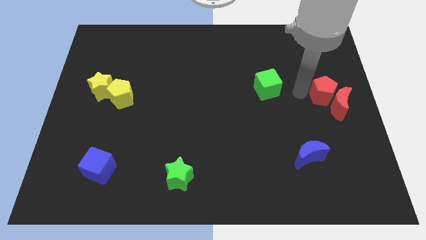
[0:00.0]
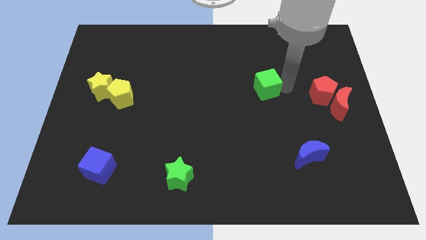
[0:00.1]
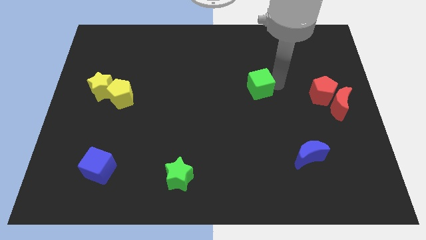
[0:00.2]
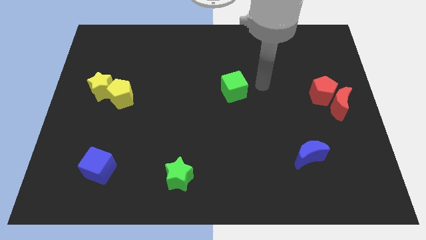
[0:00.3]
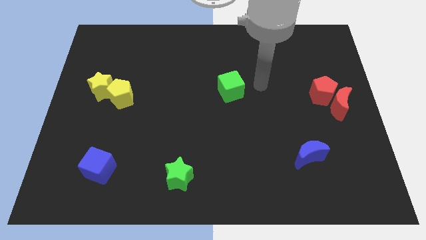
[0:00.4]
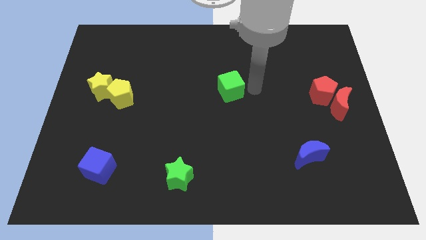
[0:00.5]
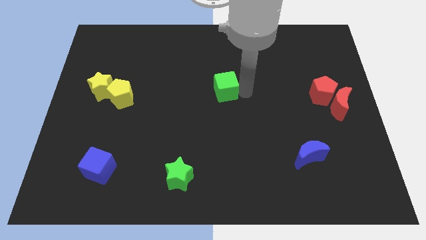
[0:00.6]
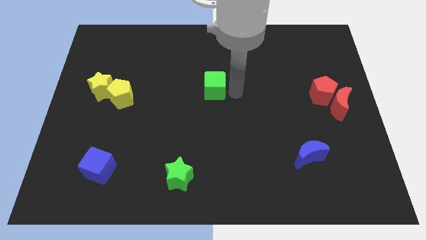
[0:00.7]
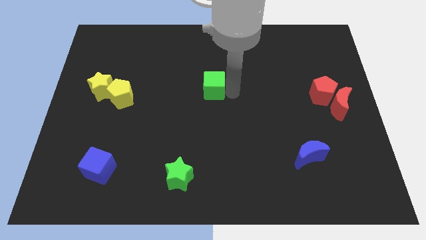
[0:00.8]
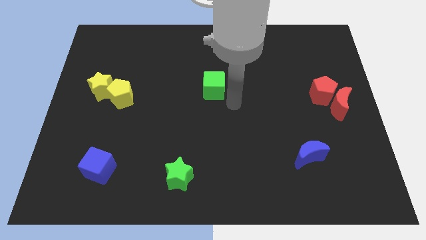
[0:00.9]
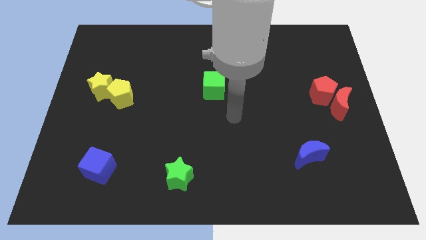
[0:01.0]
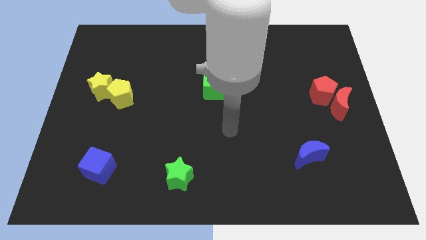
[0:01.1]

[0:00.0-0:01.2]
move the green cube to the center of the board

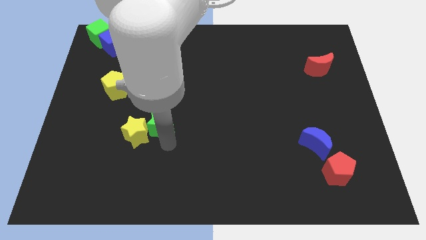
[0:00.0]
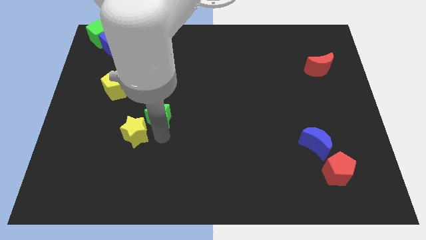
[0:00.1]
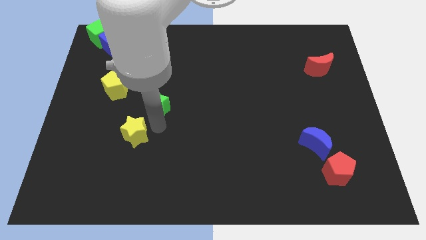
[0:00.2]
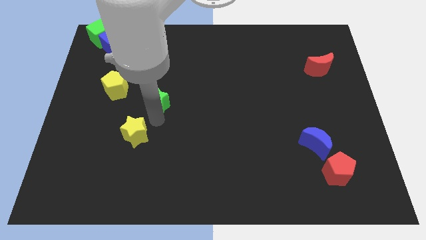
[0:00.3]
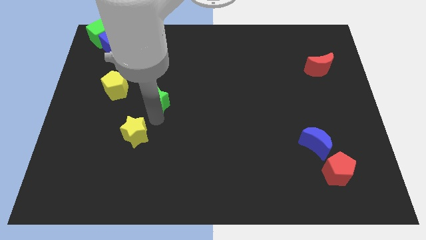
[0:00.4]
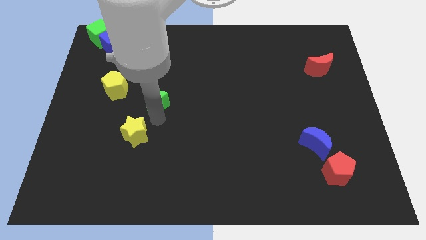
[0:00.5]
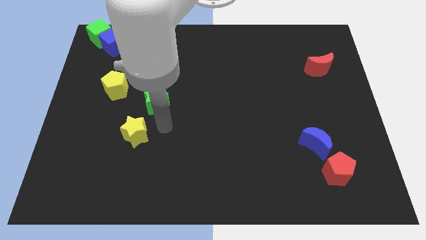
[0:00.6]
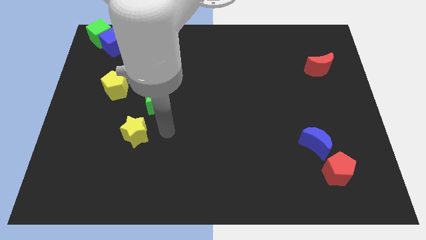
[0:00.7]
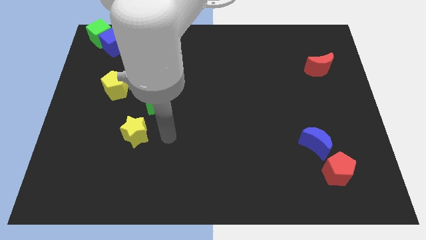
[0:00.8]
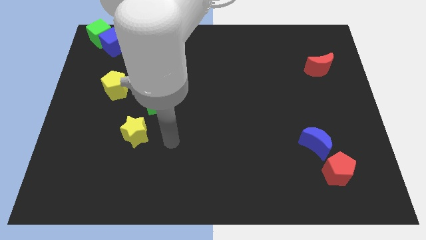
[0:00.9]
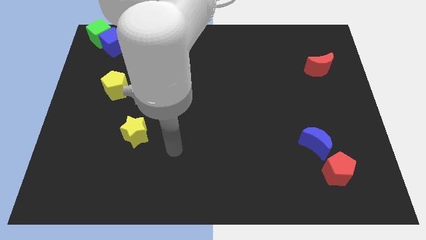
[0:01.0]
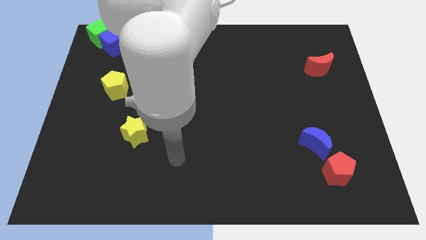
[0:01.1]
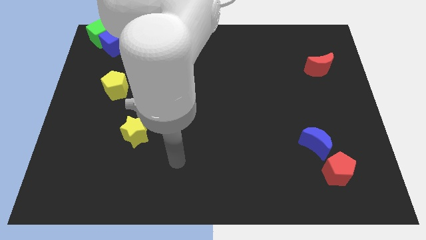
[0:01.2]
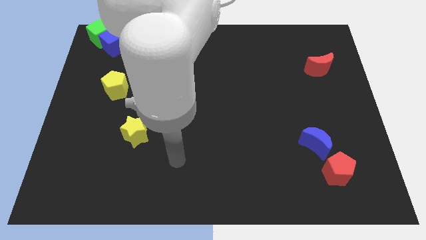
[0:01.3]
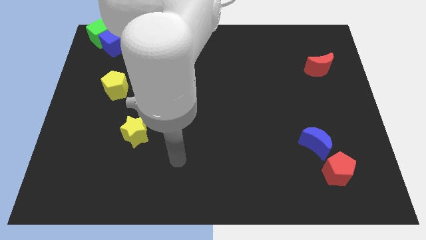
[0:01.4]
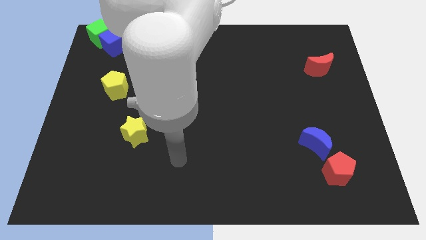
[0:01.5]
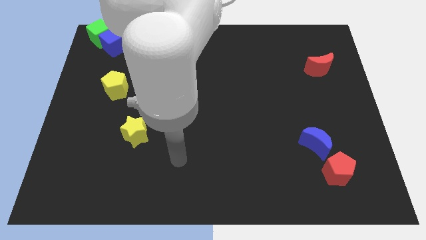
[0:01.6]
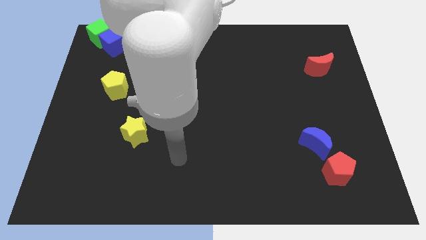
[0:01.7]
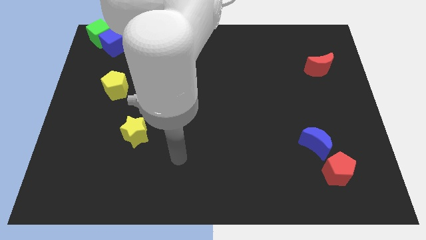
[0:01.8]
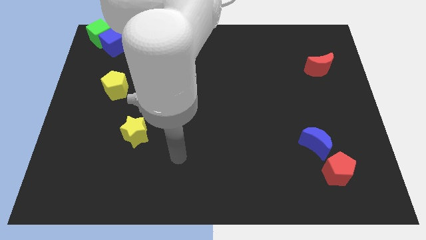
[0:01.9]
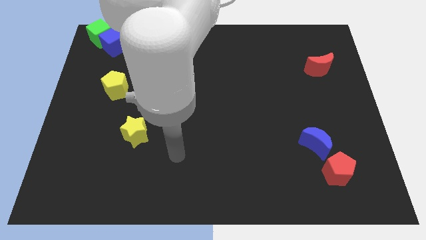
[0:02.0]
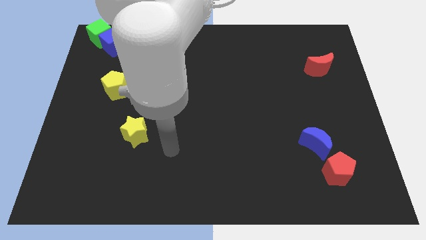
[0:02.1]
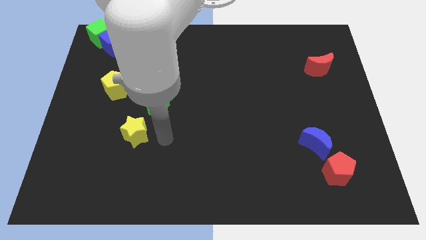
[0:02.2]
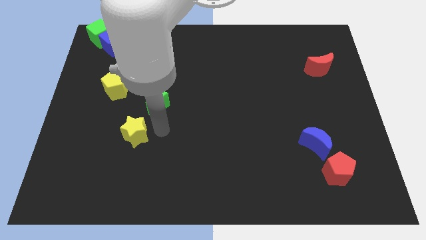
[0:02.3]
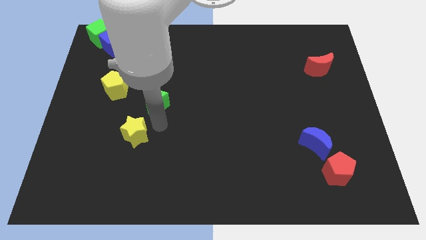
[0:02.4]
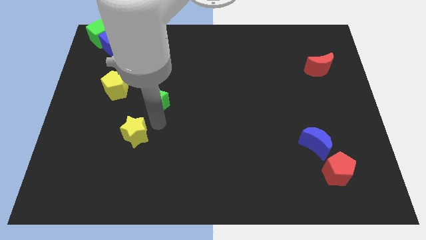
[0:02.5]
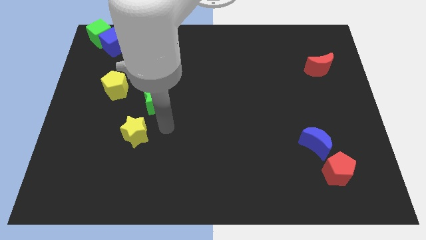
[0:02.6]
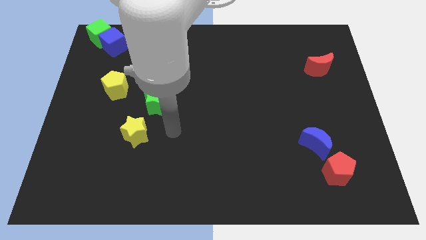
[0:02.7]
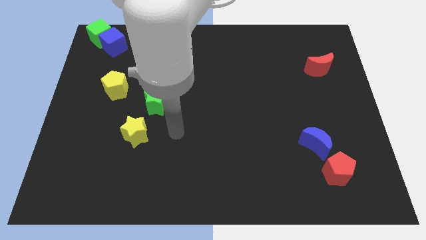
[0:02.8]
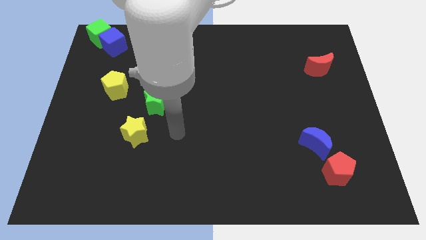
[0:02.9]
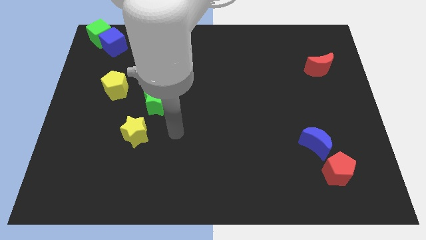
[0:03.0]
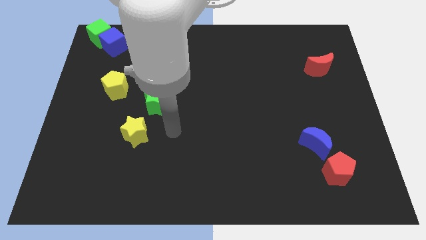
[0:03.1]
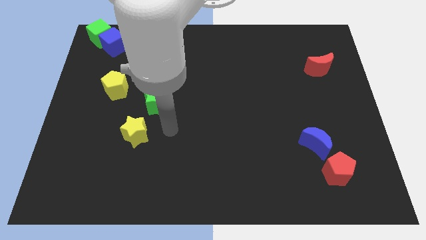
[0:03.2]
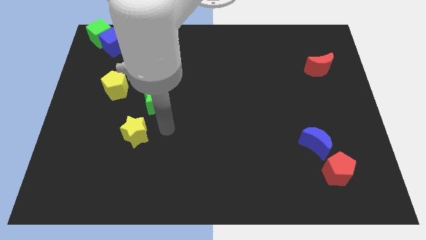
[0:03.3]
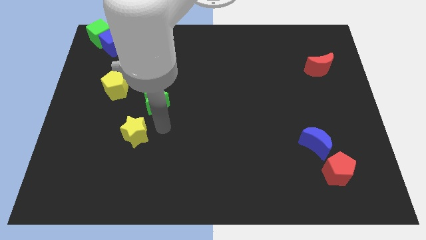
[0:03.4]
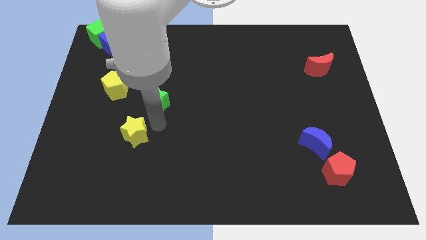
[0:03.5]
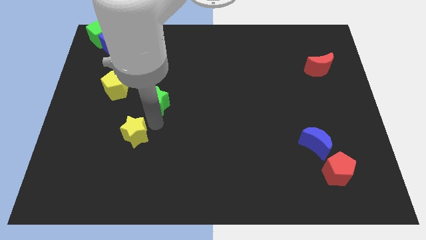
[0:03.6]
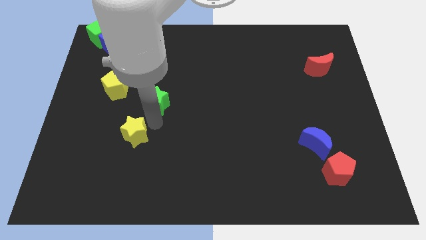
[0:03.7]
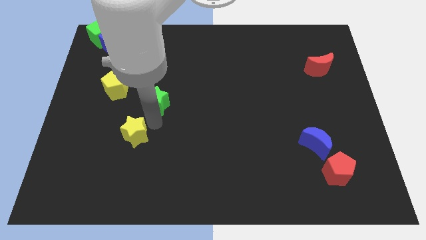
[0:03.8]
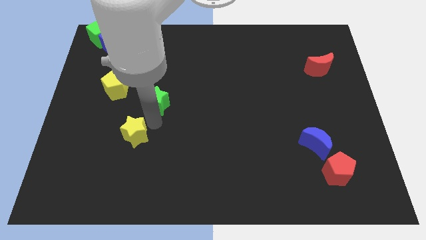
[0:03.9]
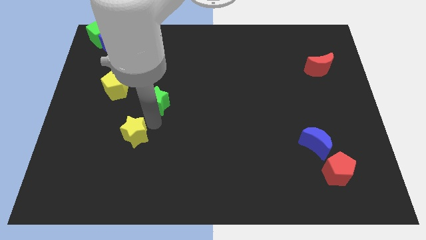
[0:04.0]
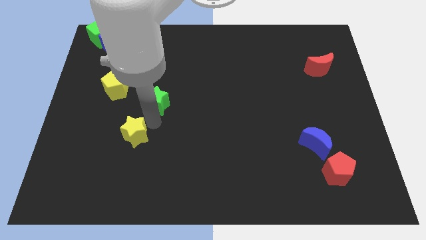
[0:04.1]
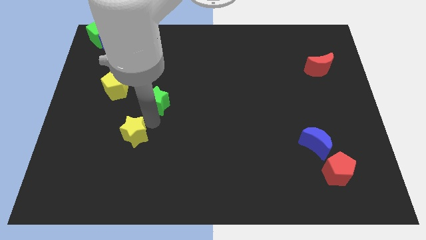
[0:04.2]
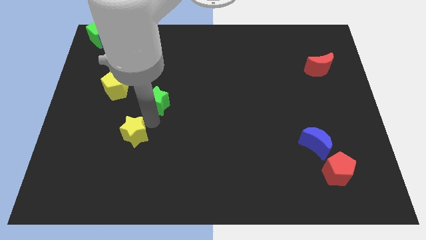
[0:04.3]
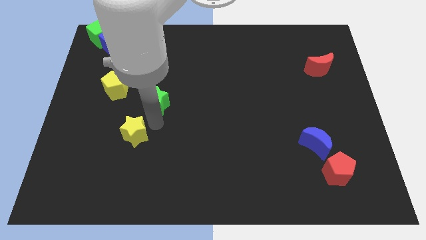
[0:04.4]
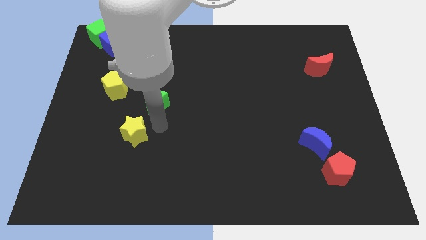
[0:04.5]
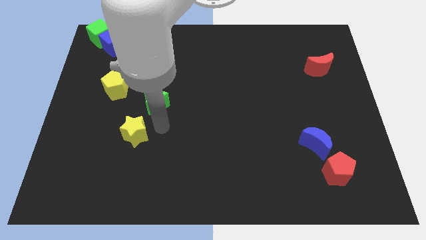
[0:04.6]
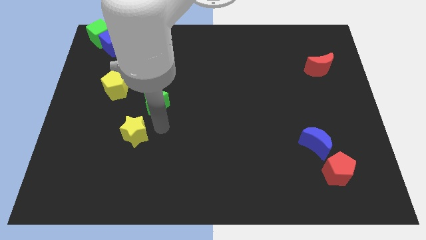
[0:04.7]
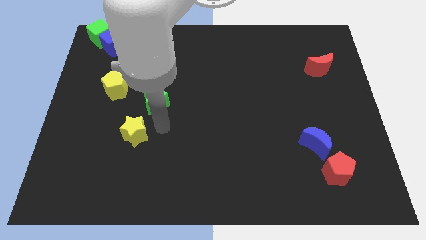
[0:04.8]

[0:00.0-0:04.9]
push the green star to the top right side of the yellow star

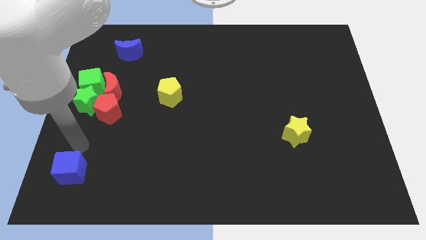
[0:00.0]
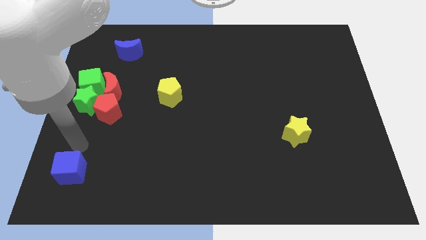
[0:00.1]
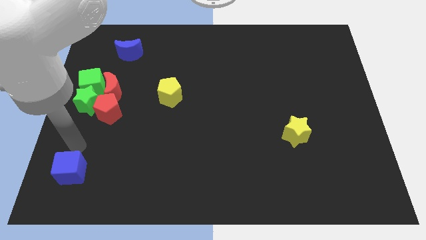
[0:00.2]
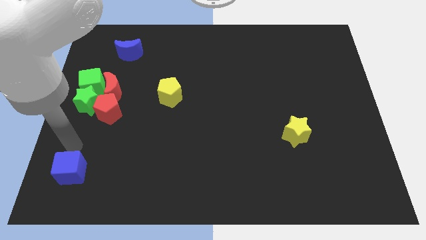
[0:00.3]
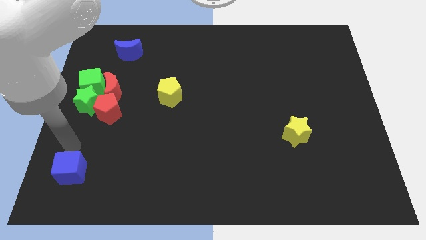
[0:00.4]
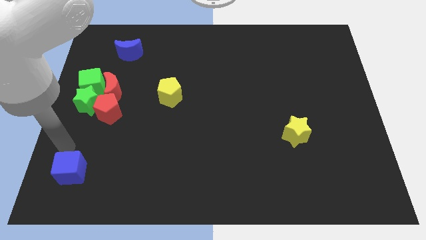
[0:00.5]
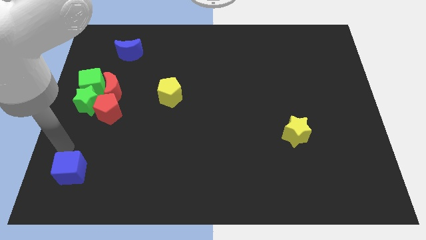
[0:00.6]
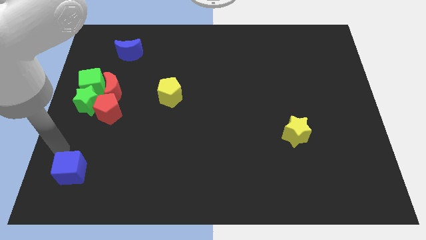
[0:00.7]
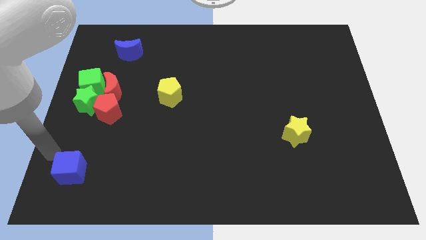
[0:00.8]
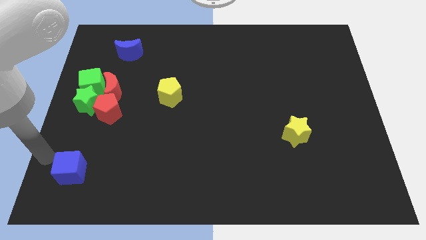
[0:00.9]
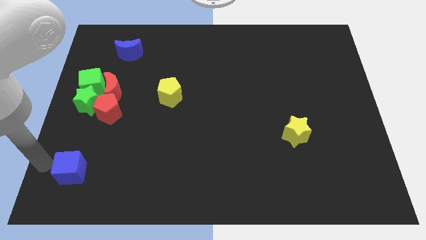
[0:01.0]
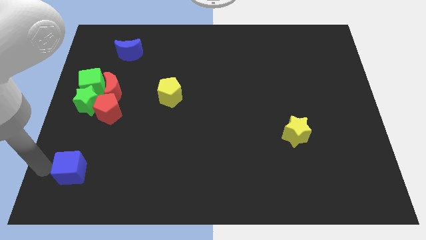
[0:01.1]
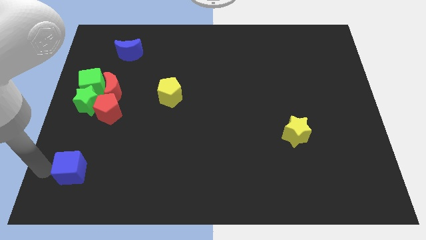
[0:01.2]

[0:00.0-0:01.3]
point your hand at the left side of the blue cube

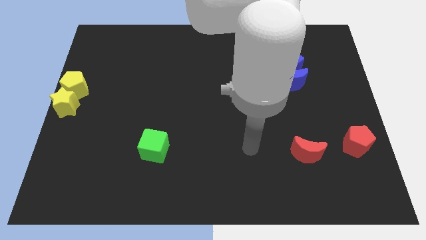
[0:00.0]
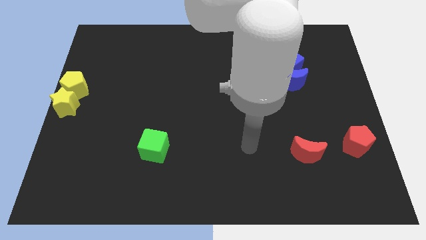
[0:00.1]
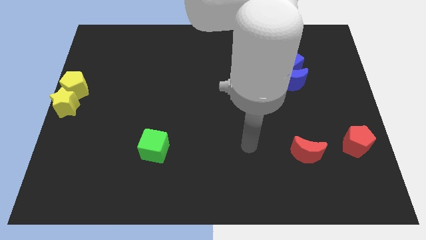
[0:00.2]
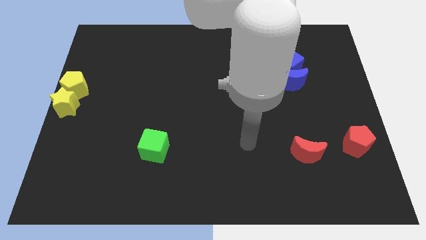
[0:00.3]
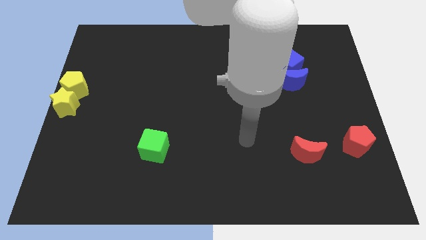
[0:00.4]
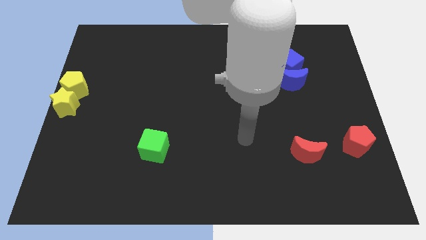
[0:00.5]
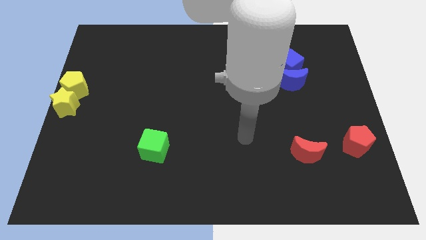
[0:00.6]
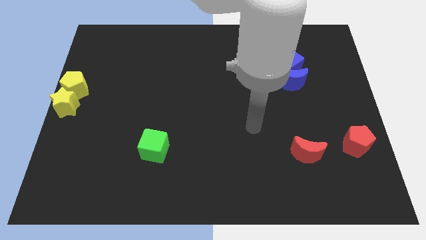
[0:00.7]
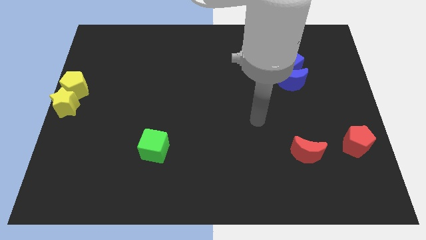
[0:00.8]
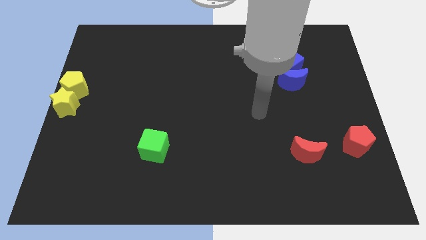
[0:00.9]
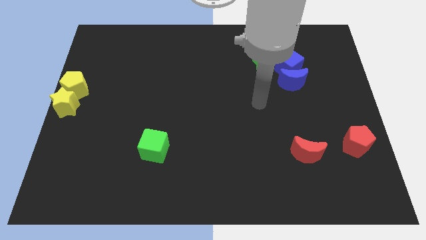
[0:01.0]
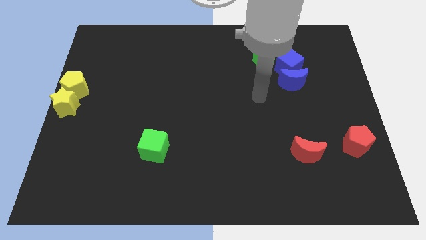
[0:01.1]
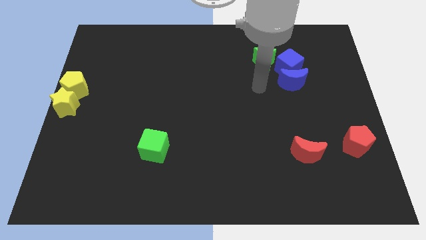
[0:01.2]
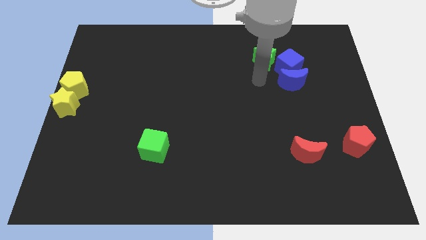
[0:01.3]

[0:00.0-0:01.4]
place your arm at the bottom of the green star
